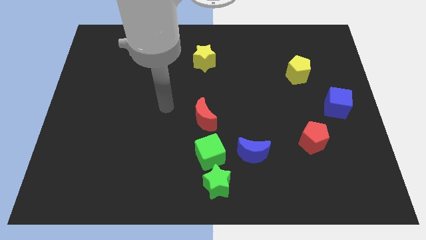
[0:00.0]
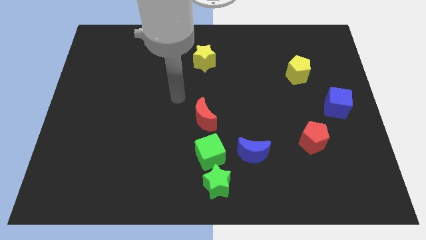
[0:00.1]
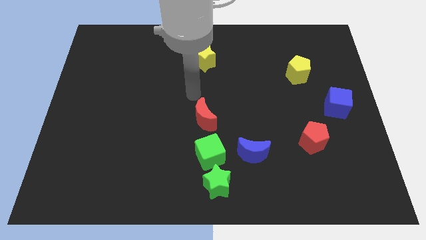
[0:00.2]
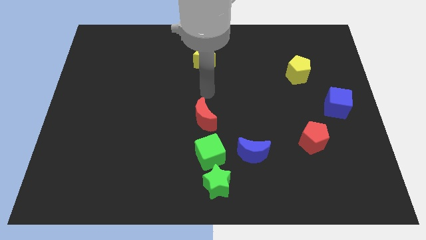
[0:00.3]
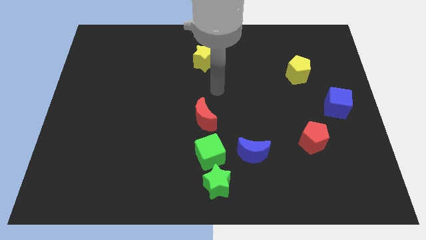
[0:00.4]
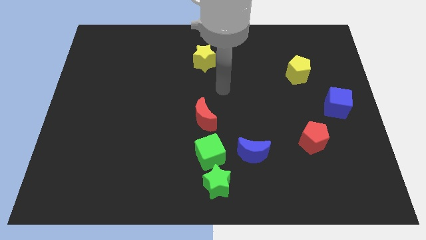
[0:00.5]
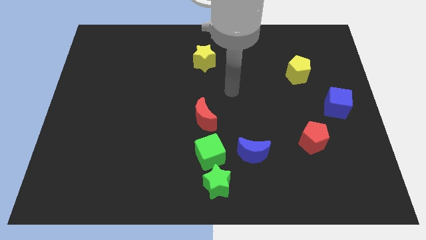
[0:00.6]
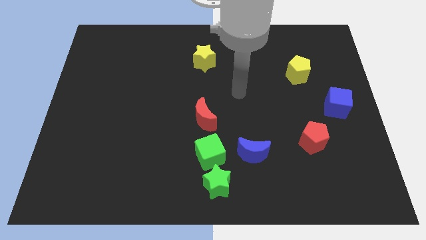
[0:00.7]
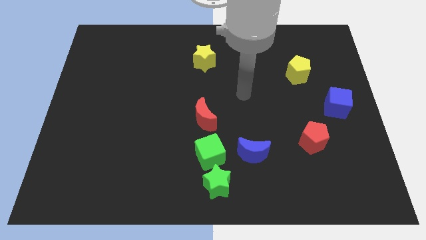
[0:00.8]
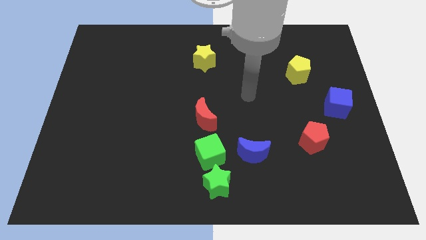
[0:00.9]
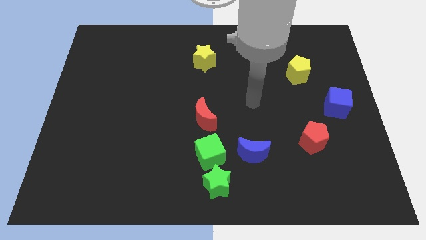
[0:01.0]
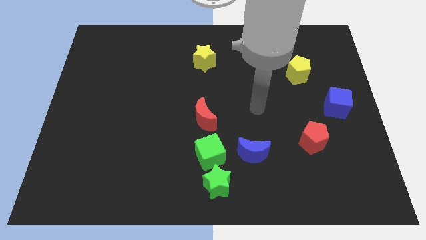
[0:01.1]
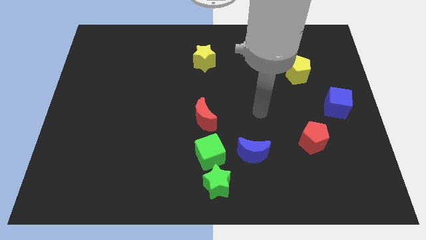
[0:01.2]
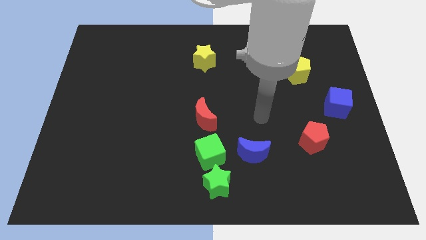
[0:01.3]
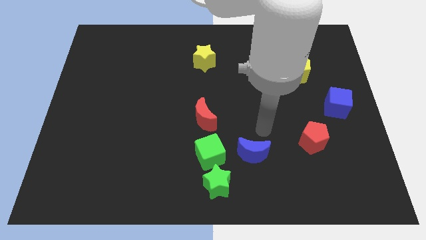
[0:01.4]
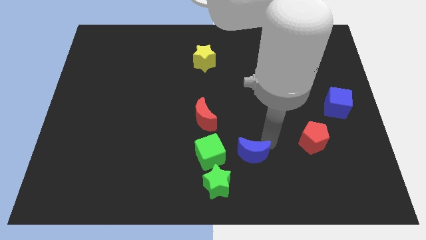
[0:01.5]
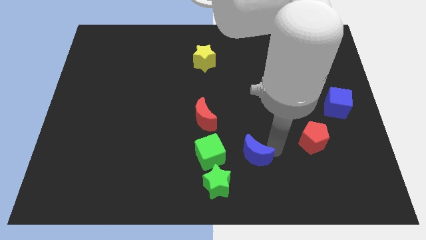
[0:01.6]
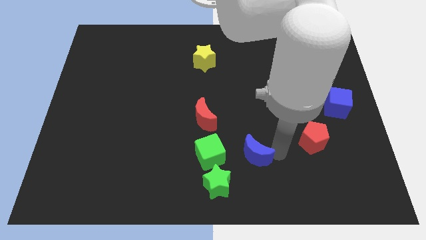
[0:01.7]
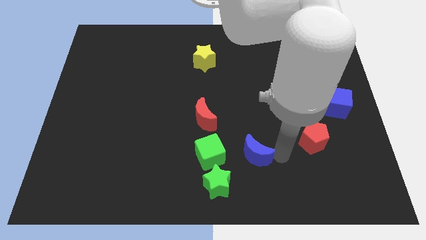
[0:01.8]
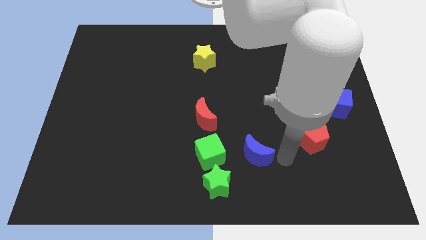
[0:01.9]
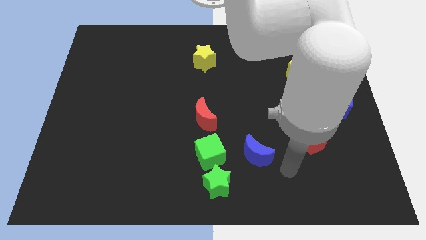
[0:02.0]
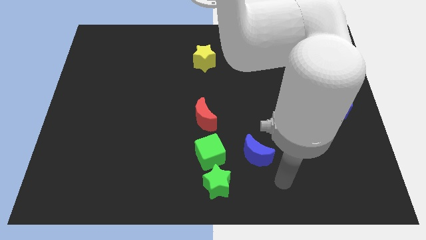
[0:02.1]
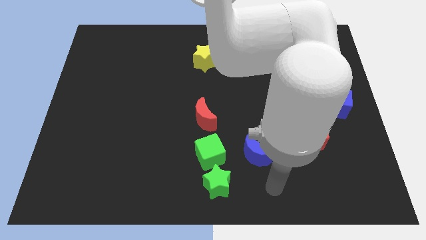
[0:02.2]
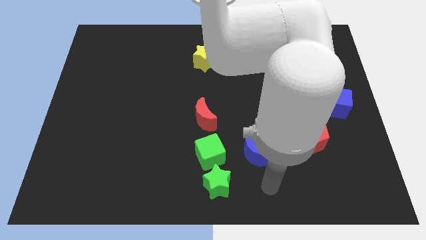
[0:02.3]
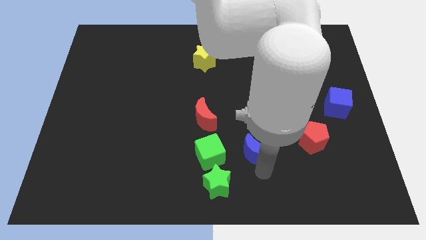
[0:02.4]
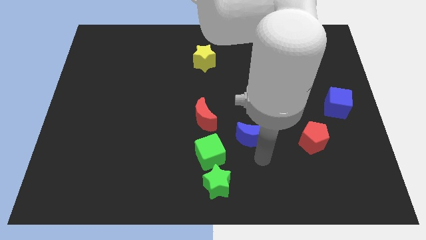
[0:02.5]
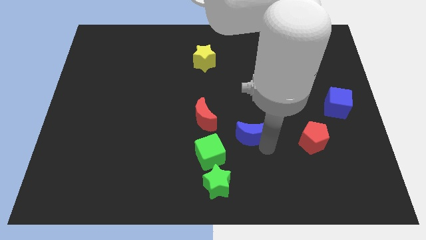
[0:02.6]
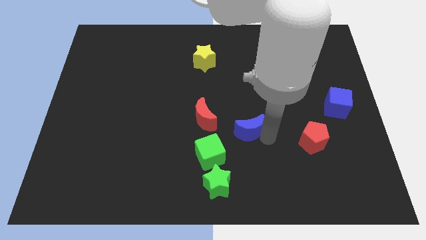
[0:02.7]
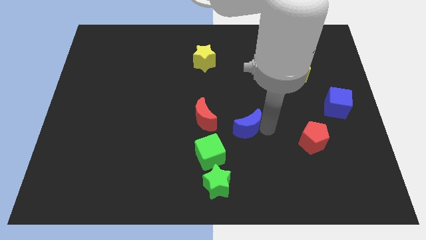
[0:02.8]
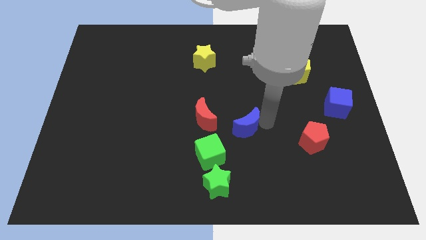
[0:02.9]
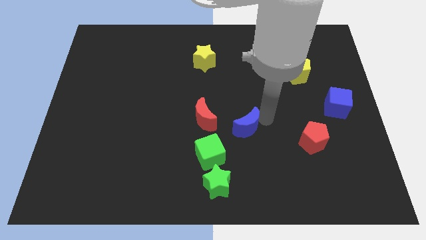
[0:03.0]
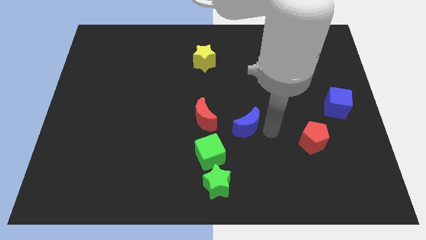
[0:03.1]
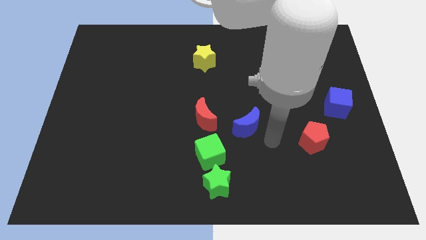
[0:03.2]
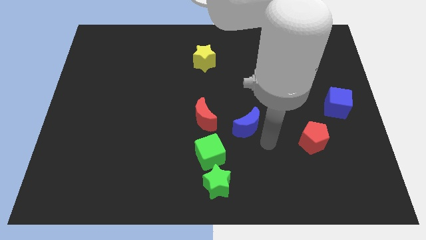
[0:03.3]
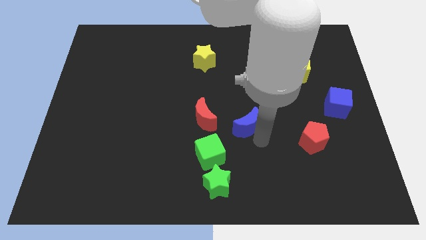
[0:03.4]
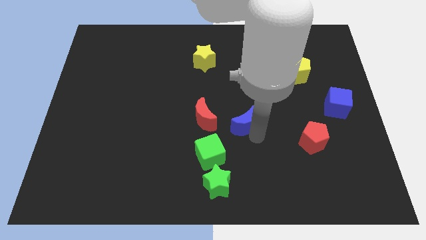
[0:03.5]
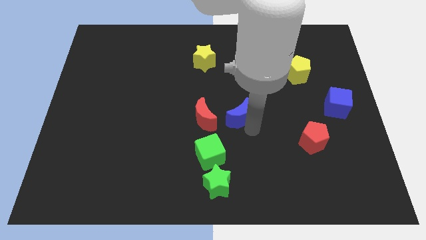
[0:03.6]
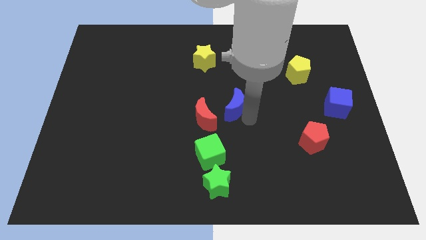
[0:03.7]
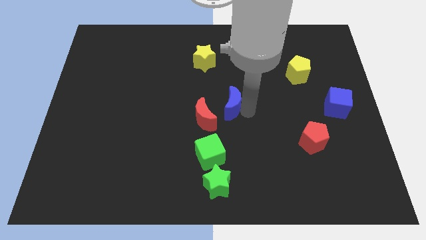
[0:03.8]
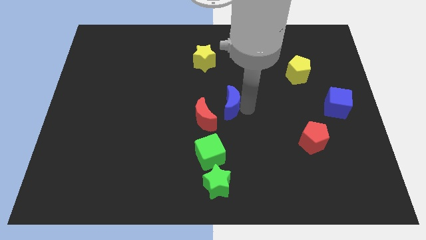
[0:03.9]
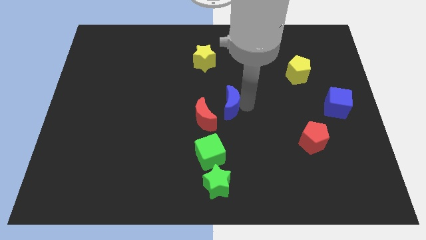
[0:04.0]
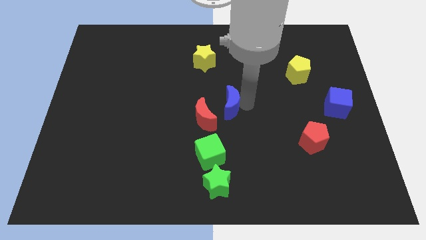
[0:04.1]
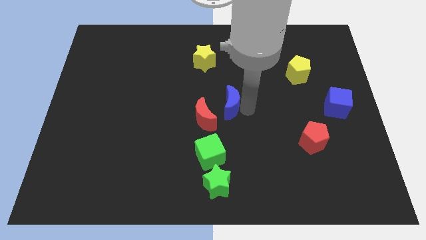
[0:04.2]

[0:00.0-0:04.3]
slide the blue moon to the right side of the red moon

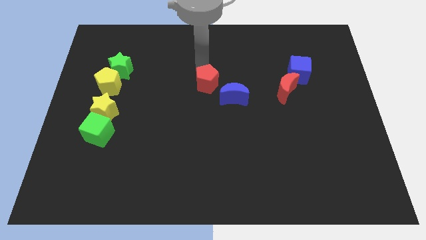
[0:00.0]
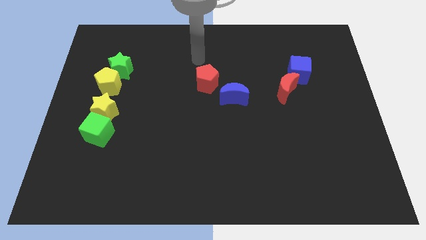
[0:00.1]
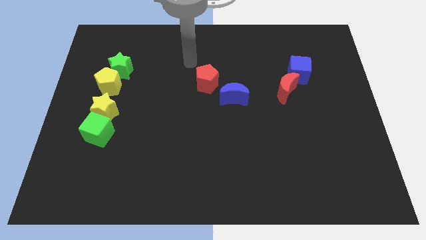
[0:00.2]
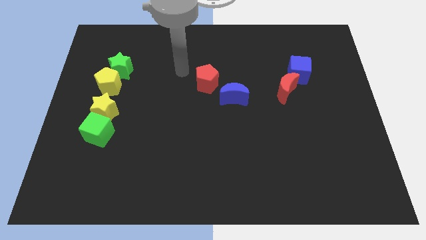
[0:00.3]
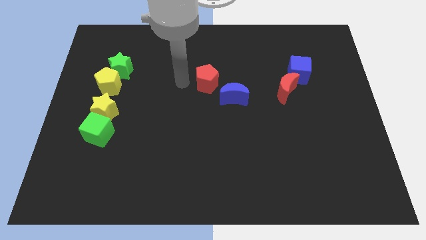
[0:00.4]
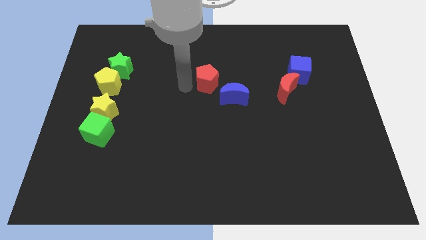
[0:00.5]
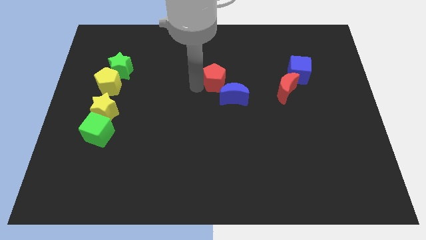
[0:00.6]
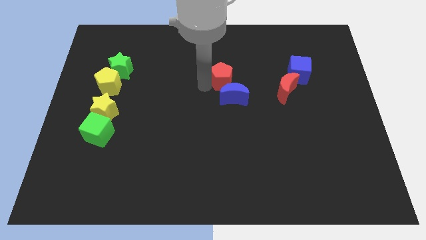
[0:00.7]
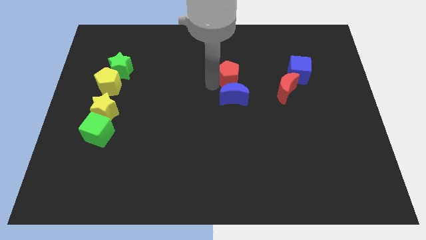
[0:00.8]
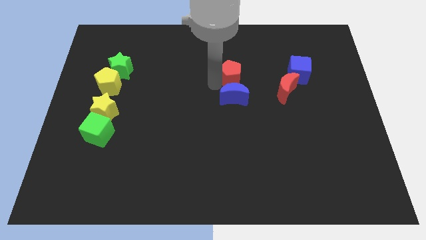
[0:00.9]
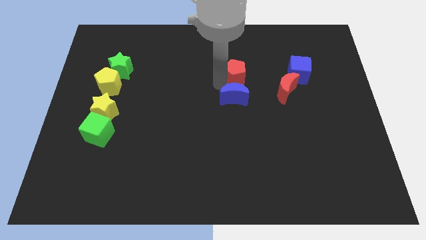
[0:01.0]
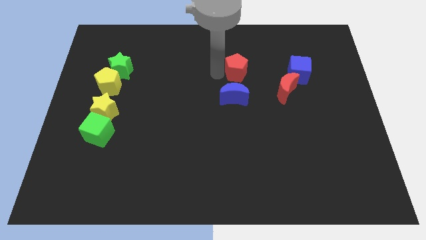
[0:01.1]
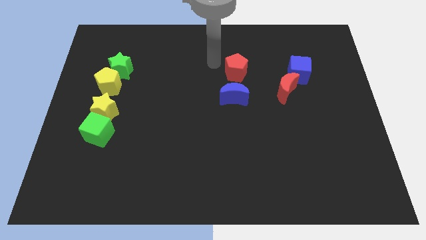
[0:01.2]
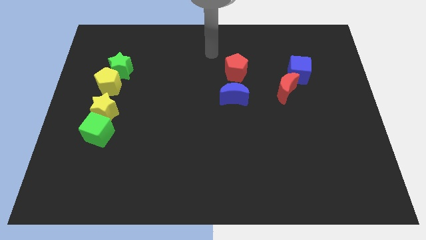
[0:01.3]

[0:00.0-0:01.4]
push red pentagon above blue crescent

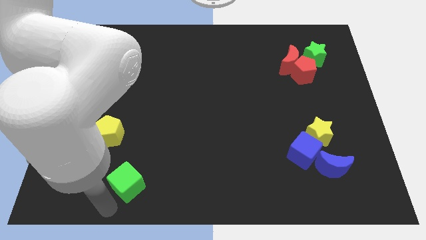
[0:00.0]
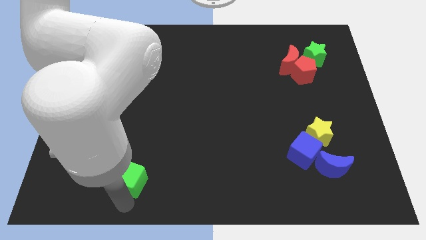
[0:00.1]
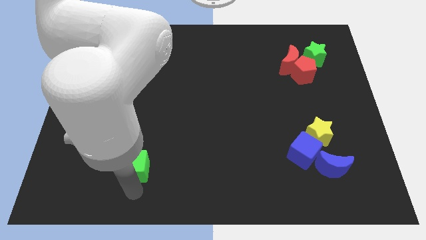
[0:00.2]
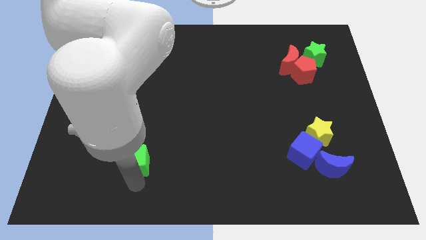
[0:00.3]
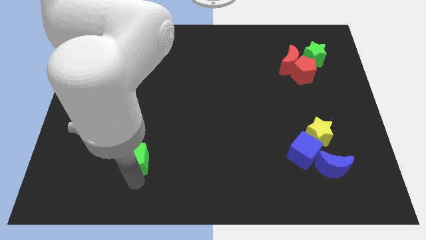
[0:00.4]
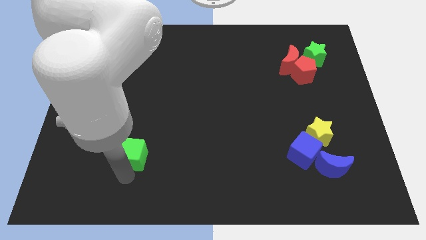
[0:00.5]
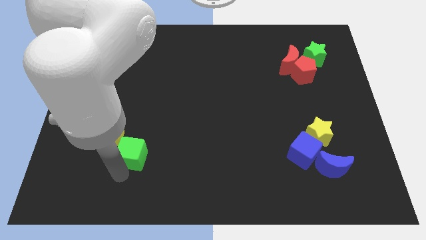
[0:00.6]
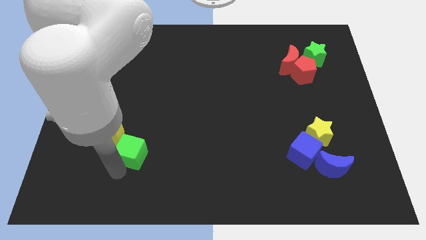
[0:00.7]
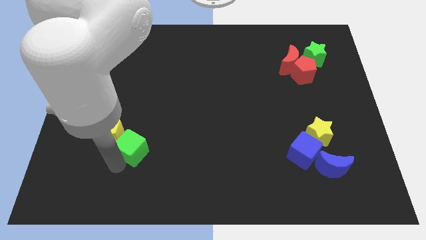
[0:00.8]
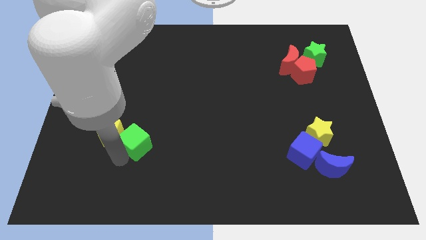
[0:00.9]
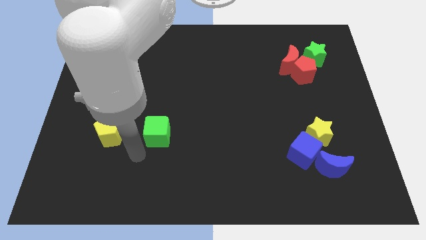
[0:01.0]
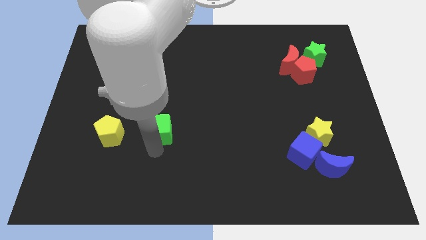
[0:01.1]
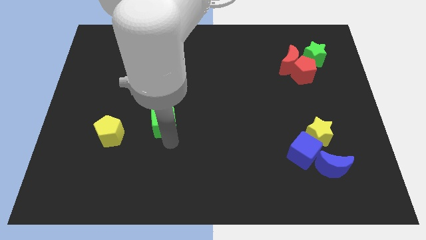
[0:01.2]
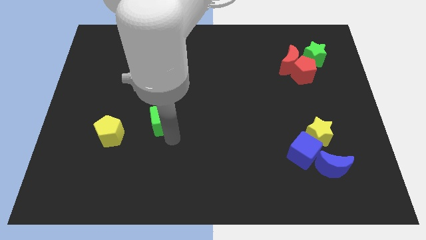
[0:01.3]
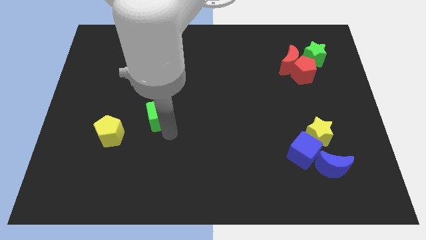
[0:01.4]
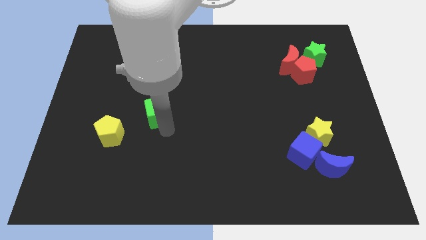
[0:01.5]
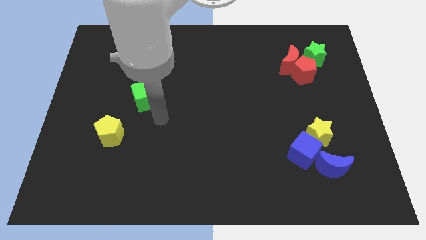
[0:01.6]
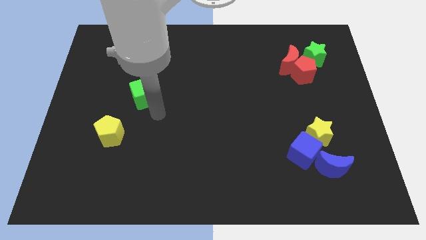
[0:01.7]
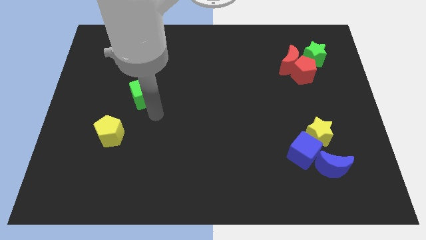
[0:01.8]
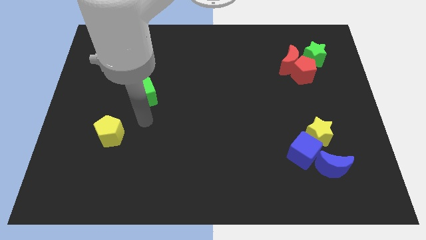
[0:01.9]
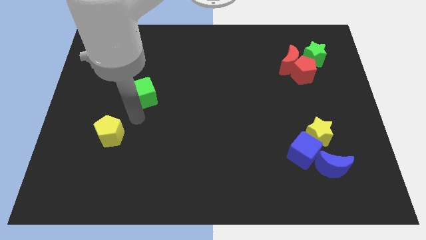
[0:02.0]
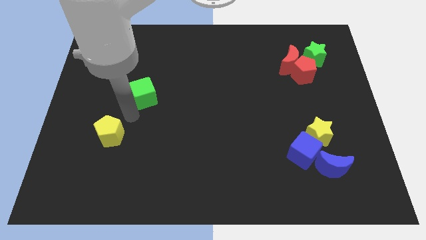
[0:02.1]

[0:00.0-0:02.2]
move the green cube to the left center of the board

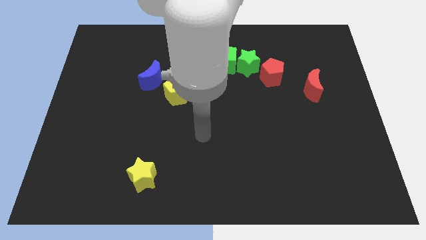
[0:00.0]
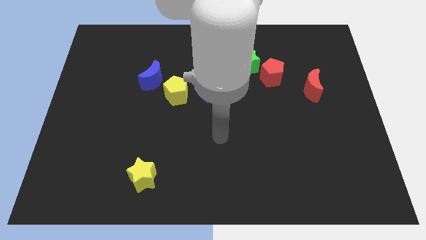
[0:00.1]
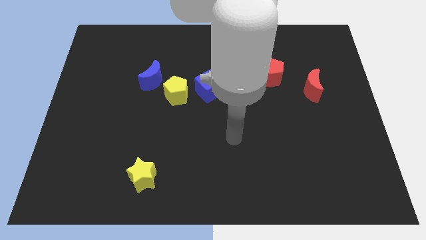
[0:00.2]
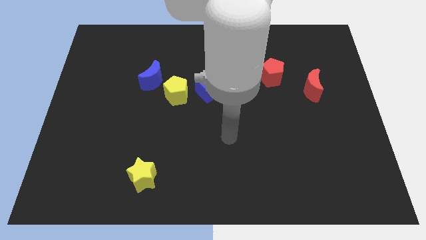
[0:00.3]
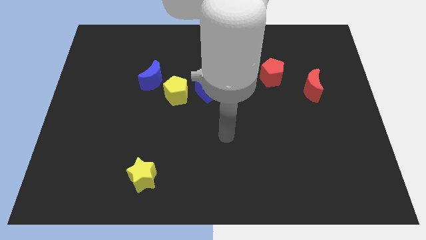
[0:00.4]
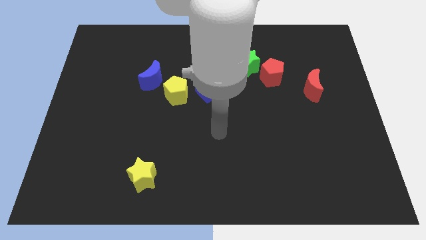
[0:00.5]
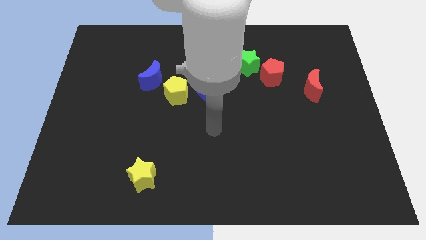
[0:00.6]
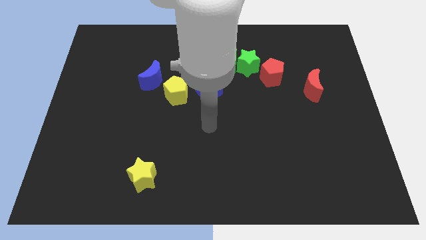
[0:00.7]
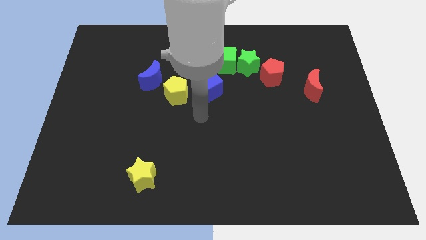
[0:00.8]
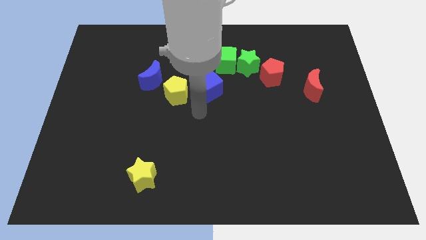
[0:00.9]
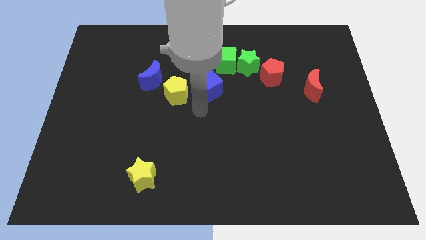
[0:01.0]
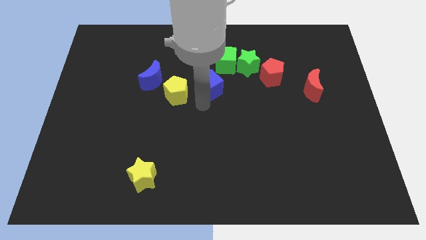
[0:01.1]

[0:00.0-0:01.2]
place arm at the bottom of blue cube
